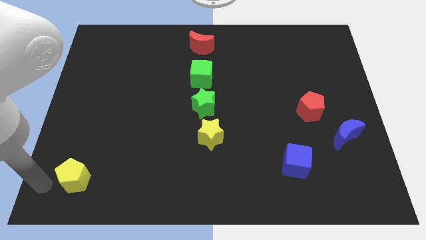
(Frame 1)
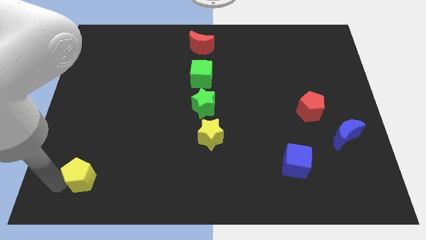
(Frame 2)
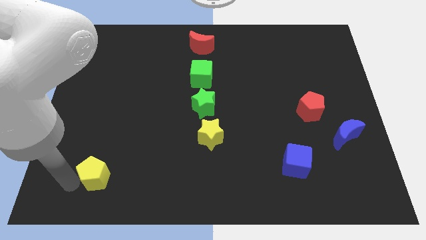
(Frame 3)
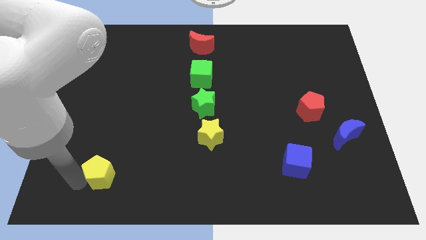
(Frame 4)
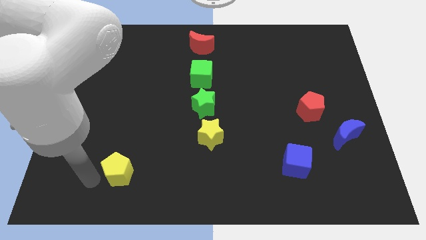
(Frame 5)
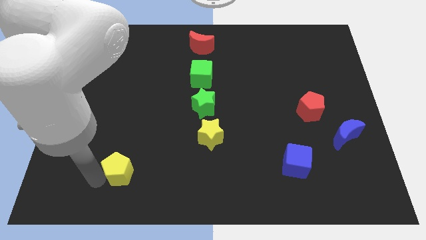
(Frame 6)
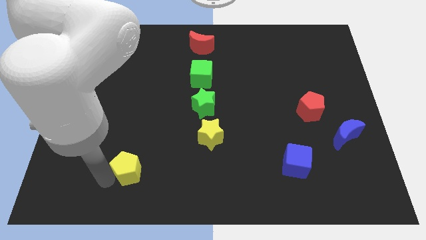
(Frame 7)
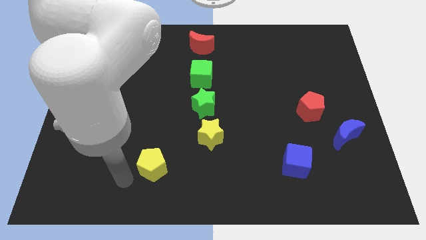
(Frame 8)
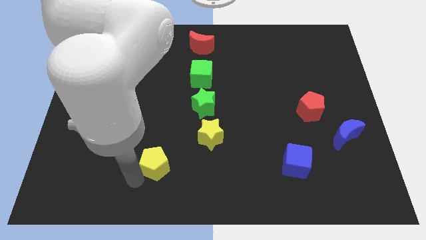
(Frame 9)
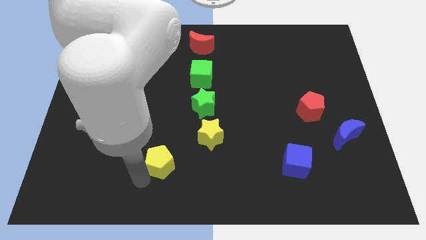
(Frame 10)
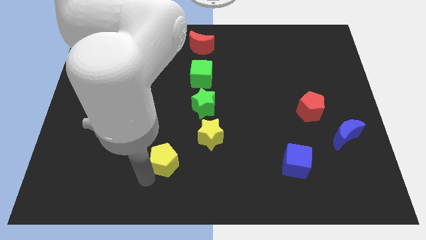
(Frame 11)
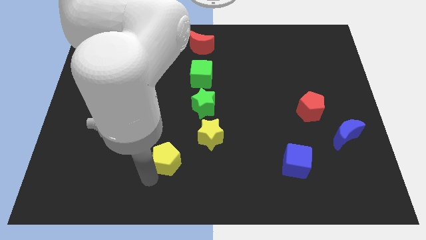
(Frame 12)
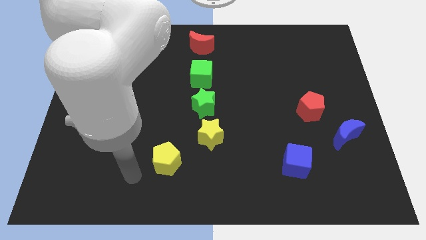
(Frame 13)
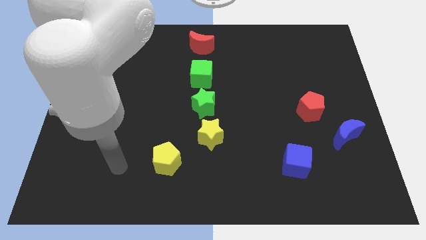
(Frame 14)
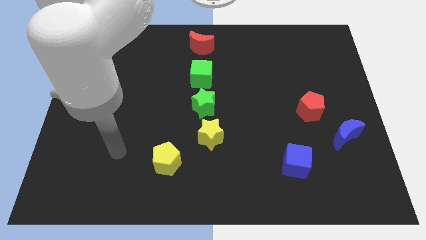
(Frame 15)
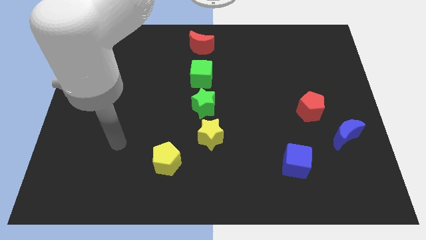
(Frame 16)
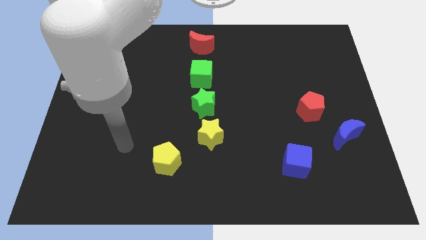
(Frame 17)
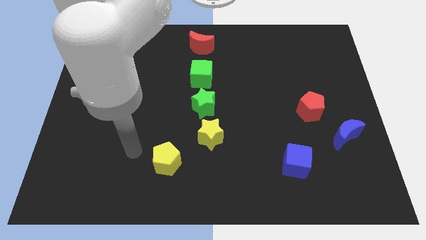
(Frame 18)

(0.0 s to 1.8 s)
slide the yellow pentagon towards the yellow star

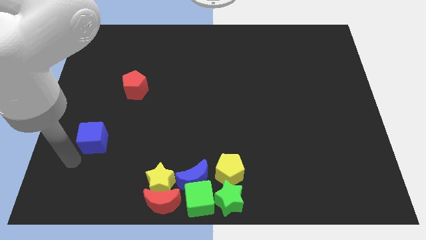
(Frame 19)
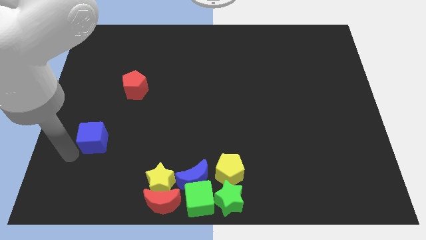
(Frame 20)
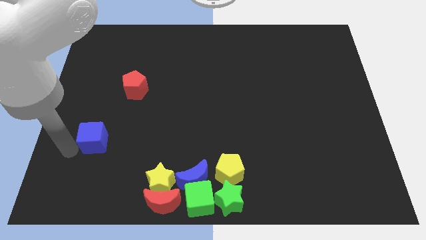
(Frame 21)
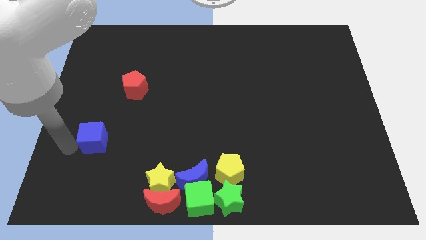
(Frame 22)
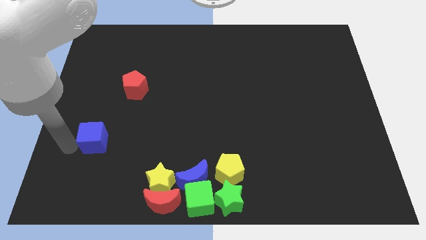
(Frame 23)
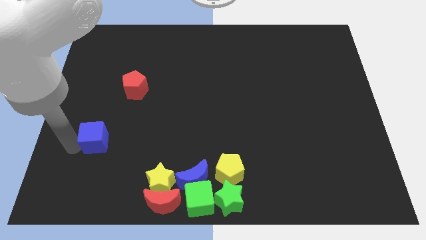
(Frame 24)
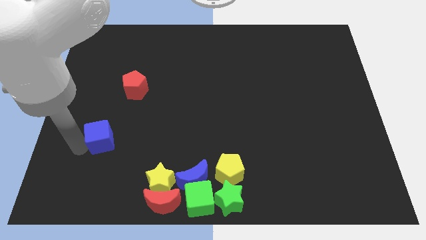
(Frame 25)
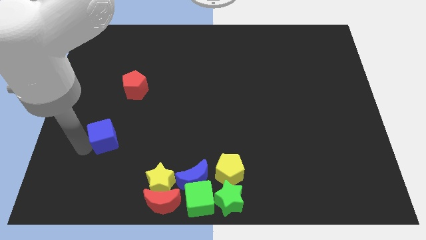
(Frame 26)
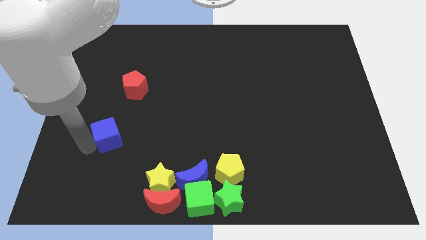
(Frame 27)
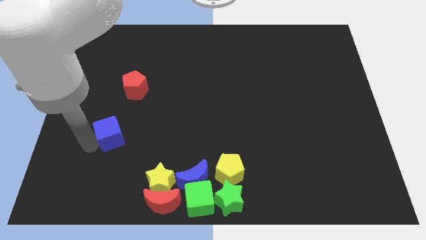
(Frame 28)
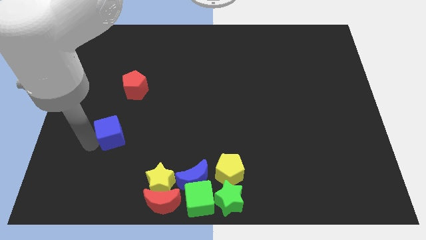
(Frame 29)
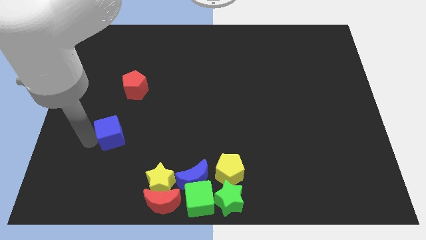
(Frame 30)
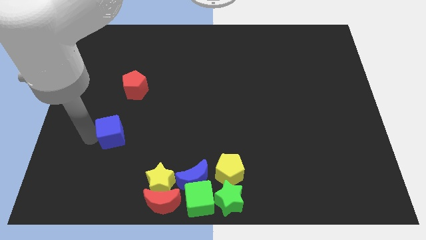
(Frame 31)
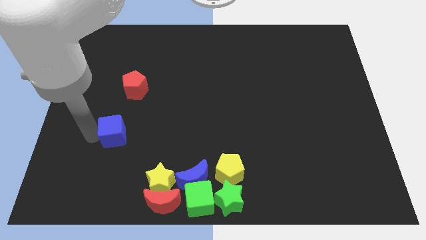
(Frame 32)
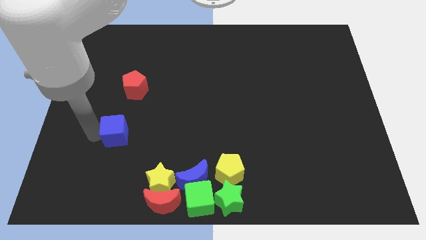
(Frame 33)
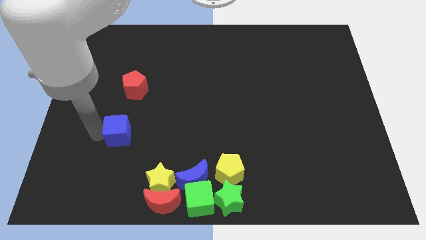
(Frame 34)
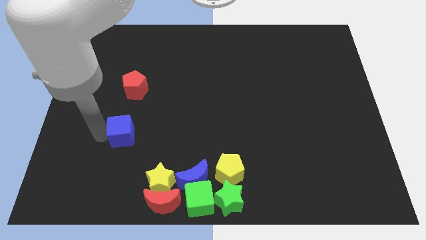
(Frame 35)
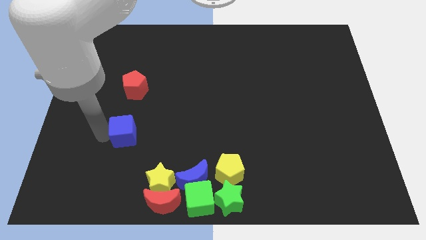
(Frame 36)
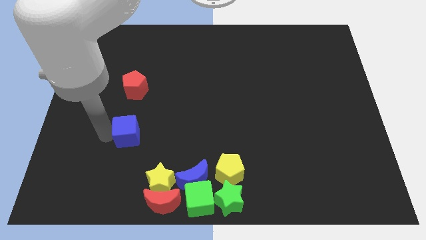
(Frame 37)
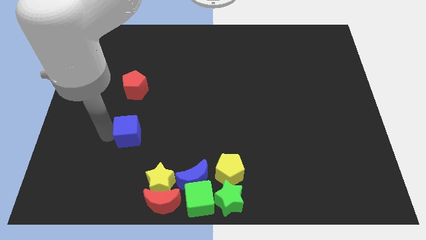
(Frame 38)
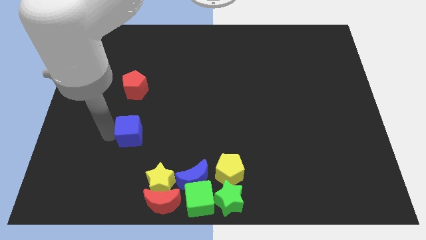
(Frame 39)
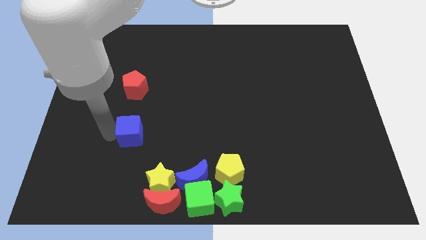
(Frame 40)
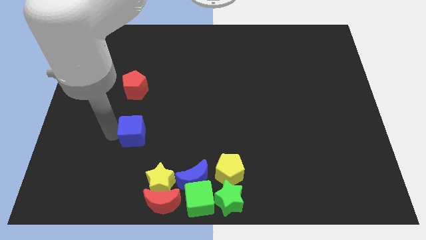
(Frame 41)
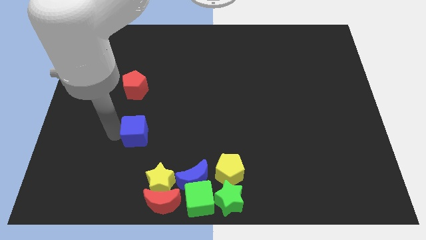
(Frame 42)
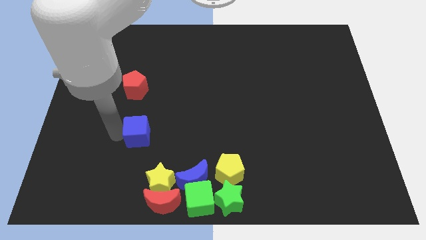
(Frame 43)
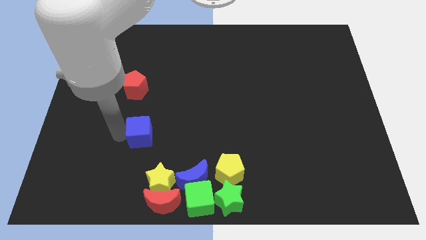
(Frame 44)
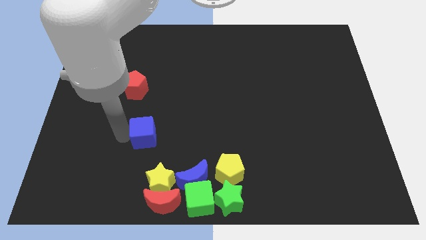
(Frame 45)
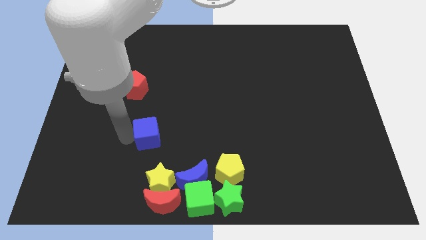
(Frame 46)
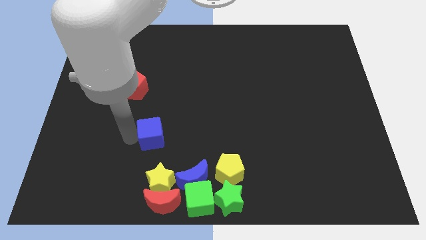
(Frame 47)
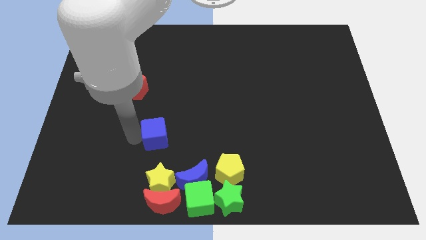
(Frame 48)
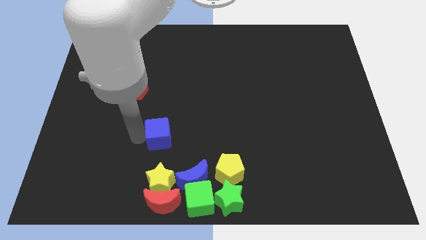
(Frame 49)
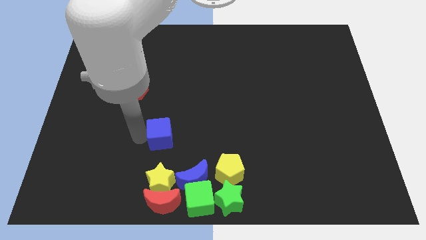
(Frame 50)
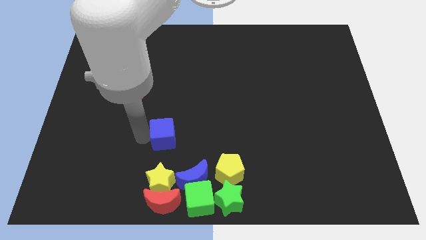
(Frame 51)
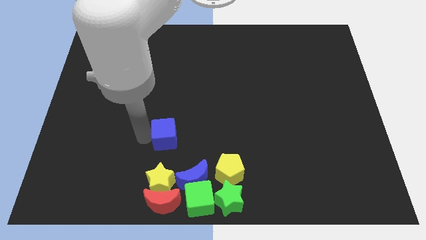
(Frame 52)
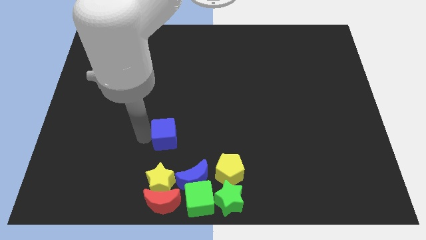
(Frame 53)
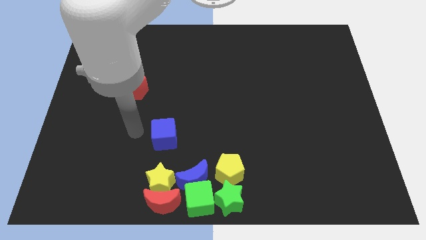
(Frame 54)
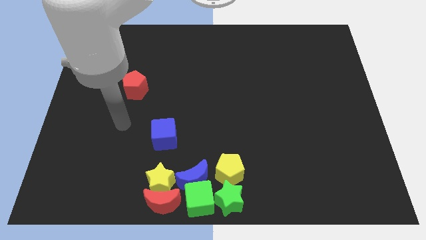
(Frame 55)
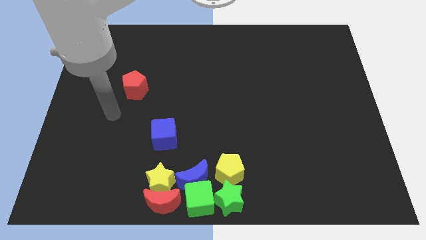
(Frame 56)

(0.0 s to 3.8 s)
move the blue cube parallel to the top of the yellow star

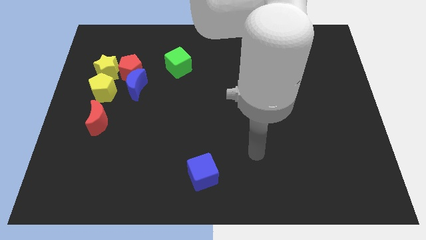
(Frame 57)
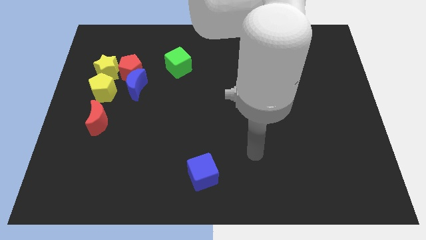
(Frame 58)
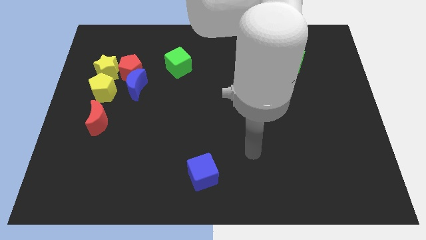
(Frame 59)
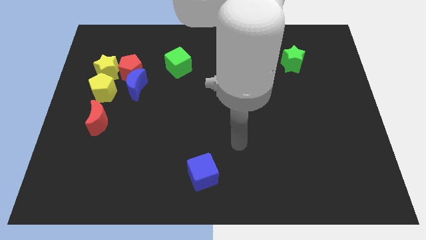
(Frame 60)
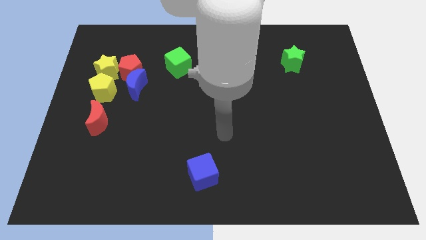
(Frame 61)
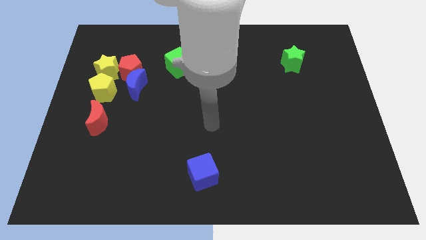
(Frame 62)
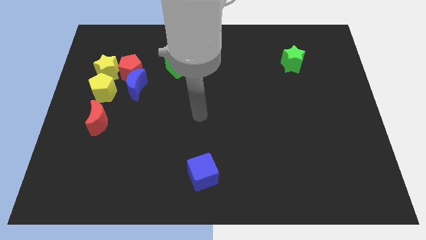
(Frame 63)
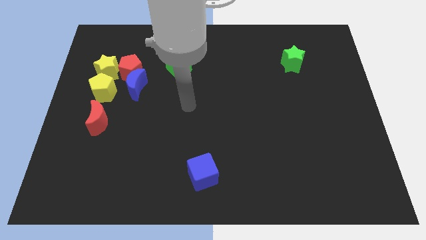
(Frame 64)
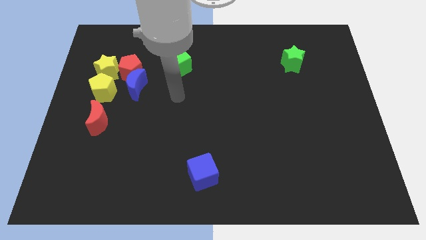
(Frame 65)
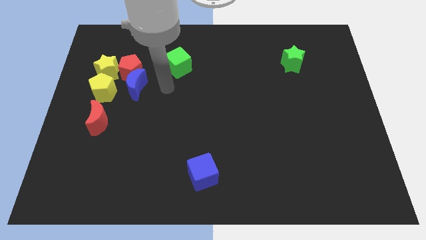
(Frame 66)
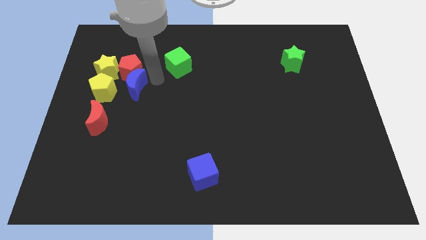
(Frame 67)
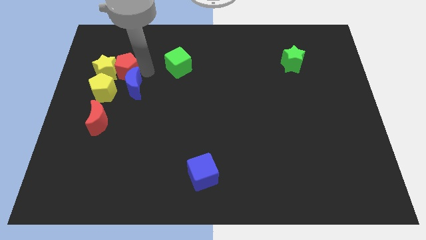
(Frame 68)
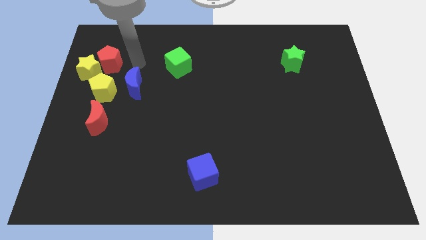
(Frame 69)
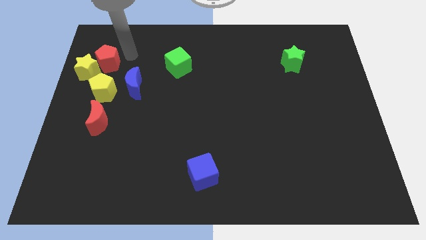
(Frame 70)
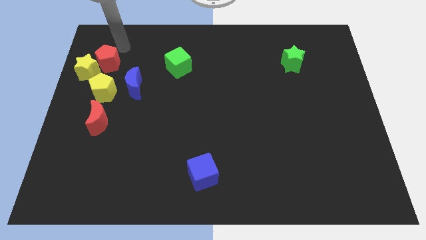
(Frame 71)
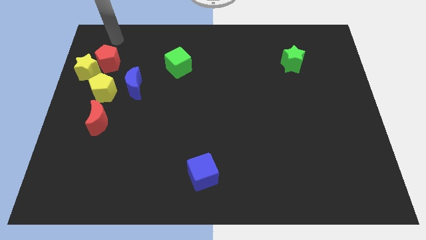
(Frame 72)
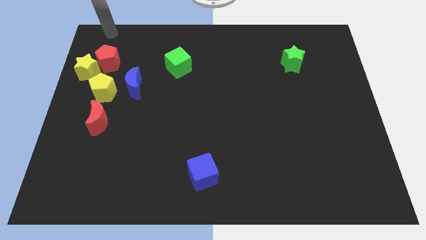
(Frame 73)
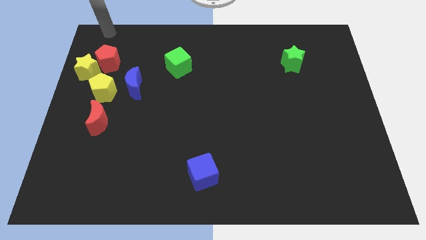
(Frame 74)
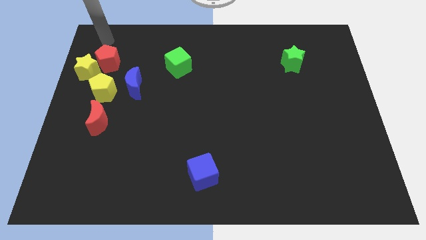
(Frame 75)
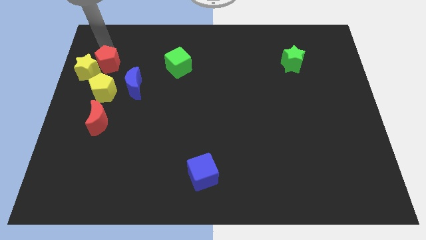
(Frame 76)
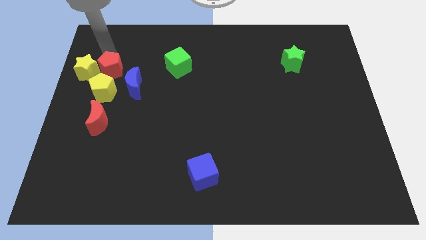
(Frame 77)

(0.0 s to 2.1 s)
move the red pentagon slightly to the downwards

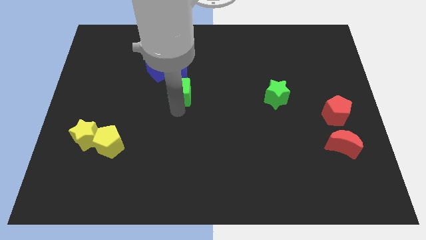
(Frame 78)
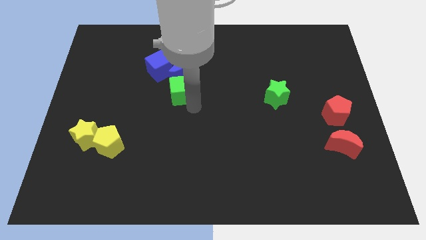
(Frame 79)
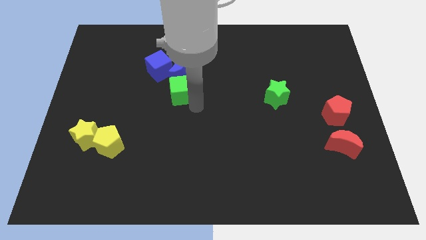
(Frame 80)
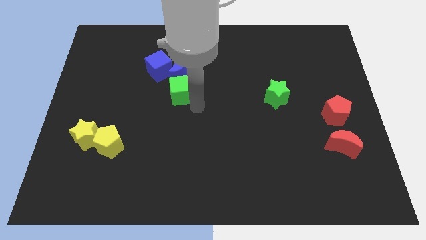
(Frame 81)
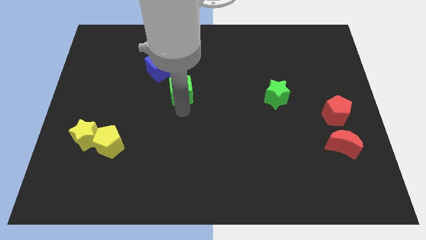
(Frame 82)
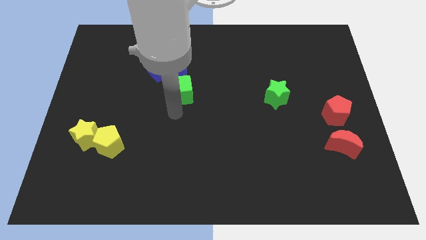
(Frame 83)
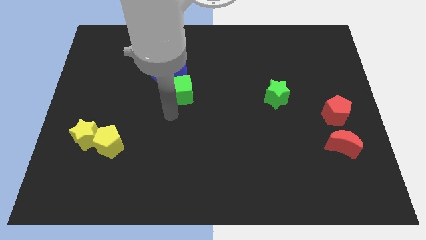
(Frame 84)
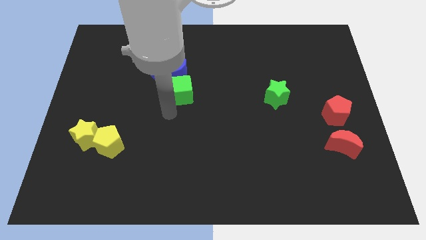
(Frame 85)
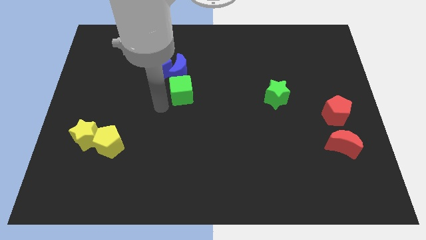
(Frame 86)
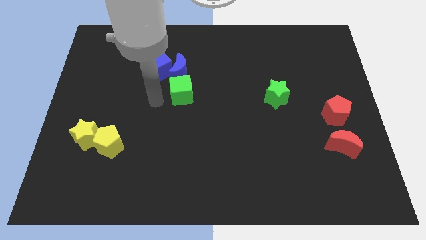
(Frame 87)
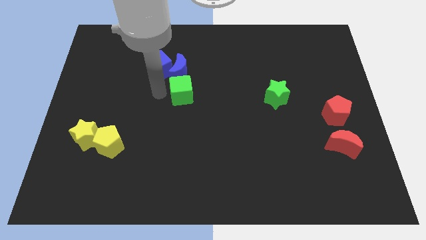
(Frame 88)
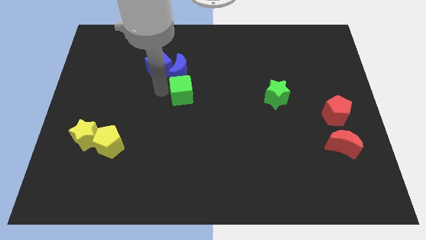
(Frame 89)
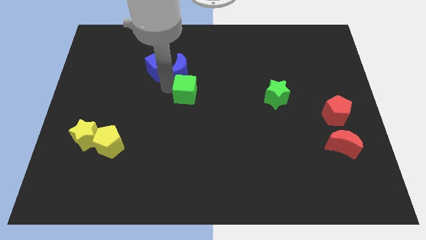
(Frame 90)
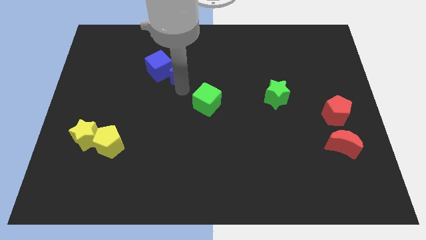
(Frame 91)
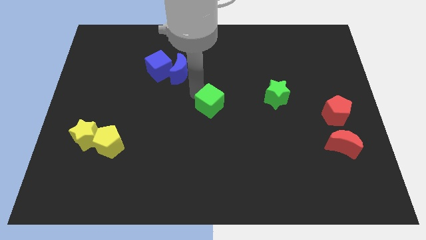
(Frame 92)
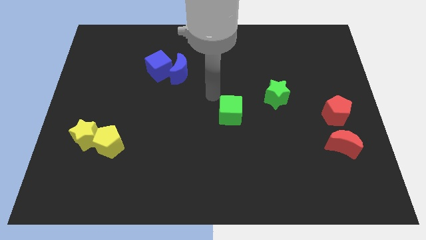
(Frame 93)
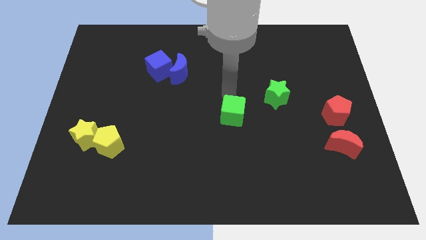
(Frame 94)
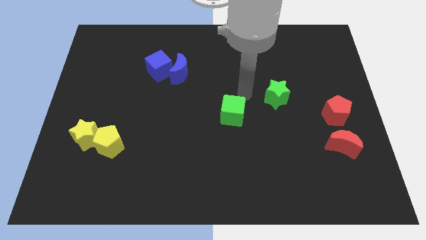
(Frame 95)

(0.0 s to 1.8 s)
push the green cube towards center side
